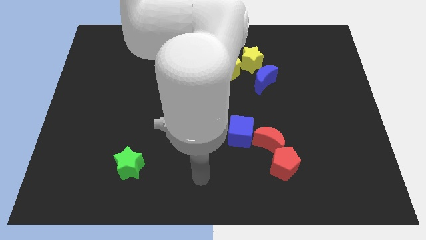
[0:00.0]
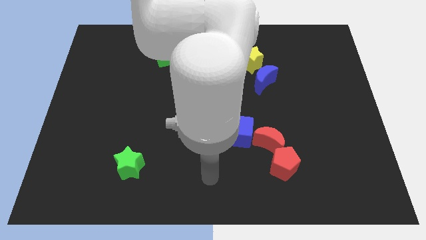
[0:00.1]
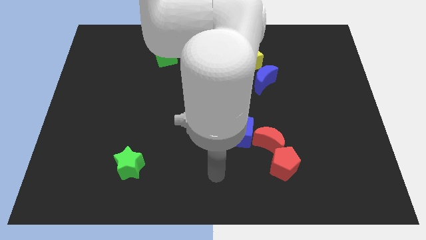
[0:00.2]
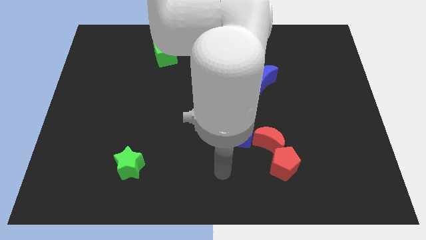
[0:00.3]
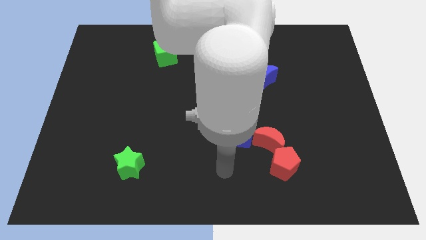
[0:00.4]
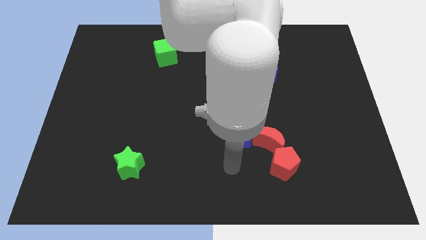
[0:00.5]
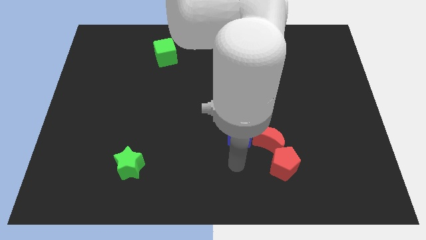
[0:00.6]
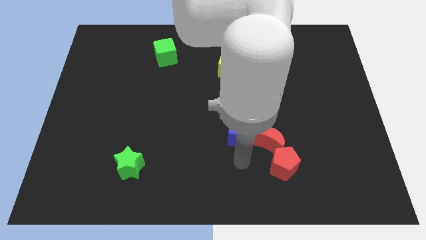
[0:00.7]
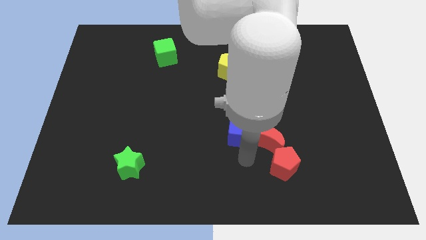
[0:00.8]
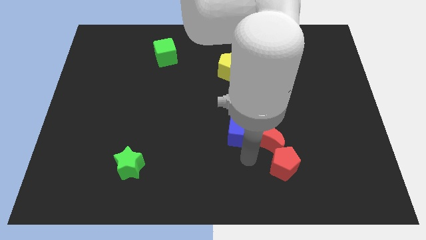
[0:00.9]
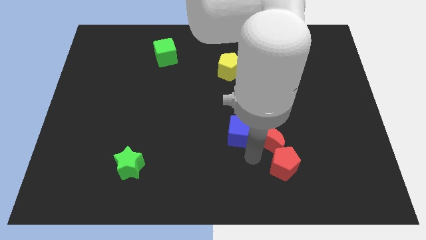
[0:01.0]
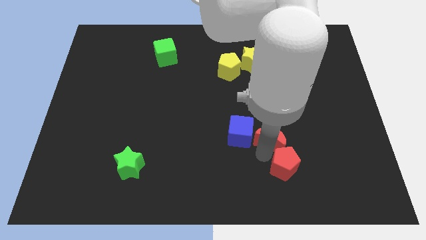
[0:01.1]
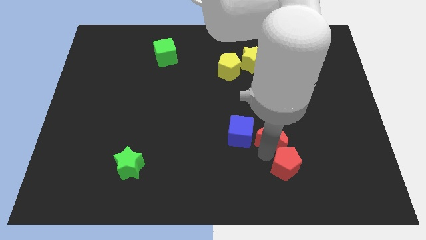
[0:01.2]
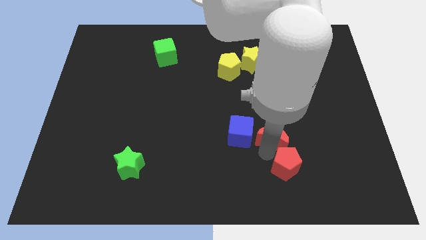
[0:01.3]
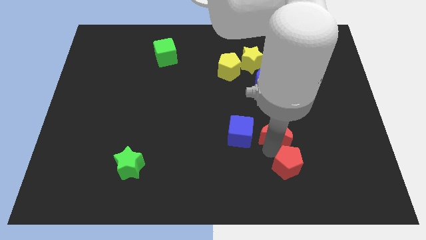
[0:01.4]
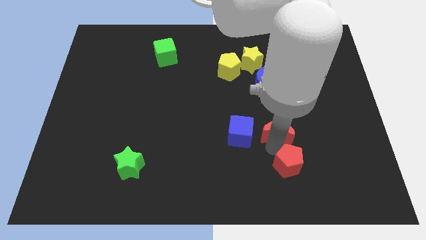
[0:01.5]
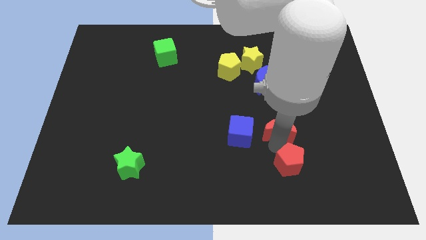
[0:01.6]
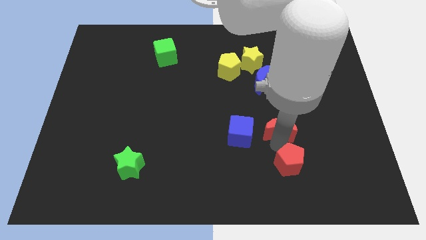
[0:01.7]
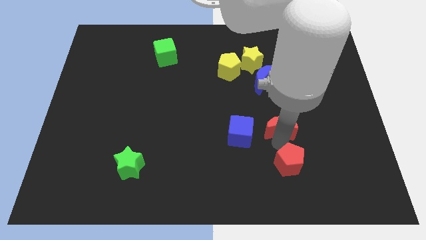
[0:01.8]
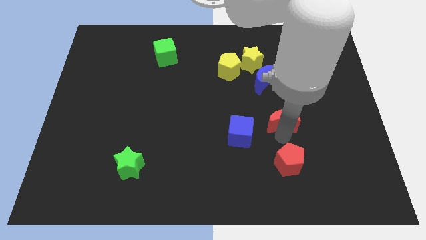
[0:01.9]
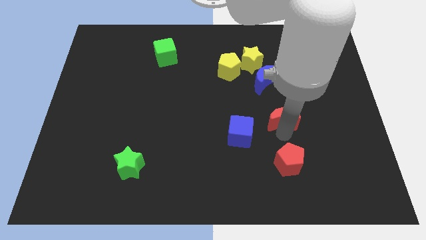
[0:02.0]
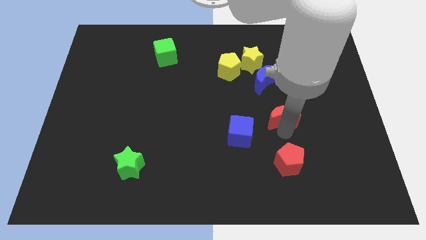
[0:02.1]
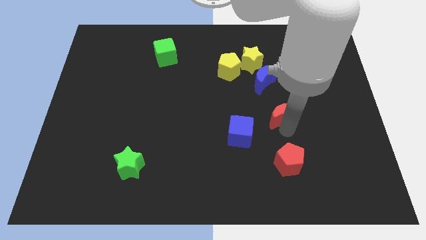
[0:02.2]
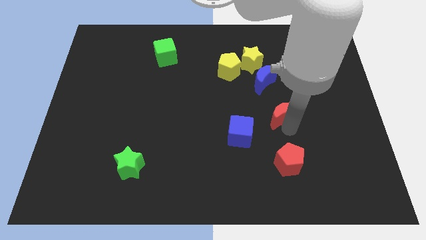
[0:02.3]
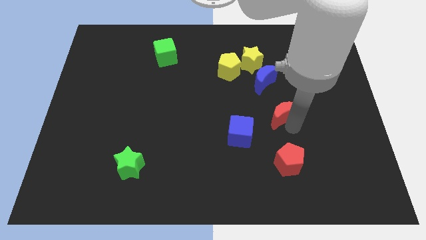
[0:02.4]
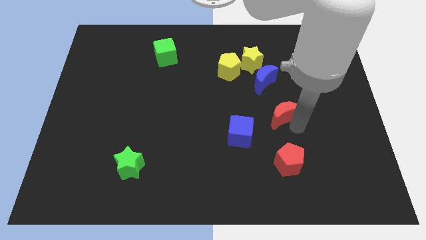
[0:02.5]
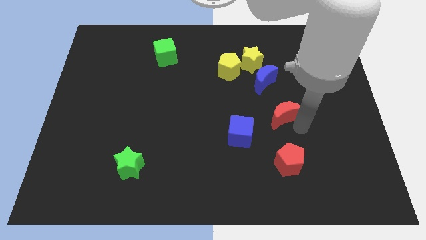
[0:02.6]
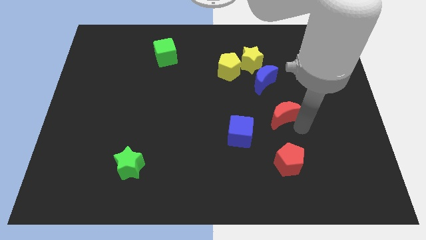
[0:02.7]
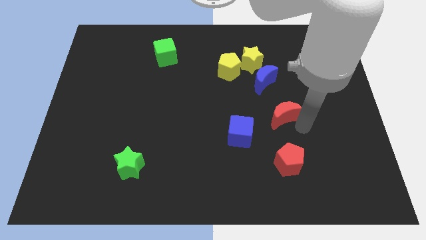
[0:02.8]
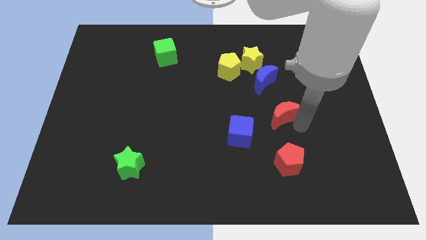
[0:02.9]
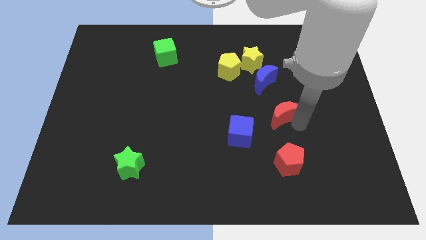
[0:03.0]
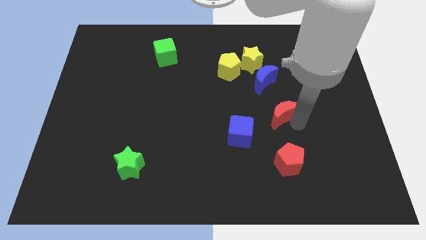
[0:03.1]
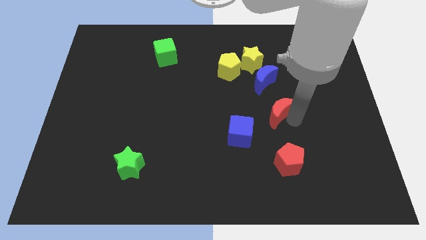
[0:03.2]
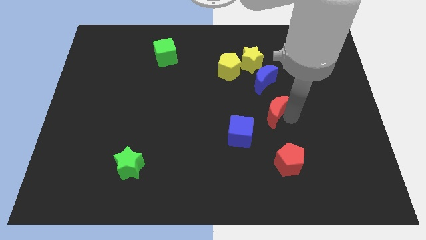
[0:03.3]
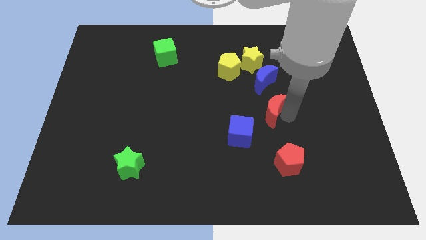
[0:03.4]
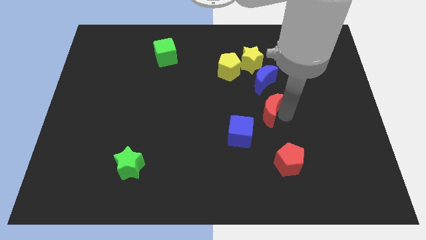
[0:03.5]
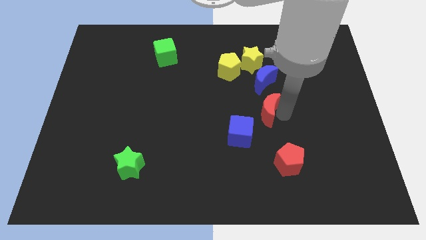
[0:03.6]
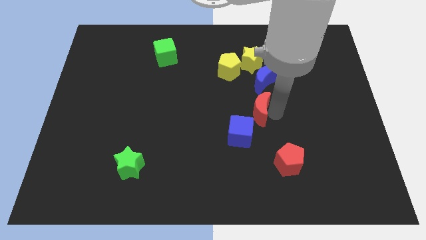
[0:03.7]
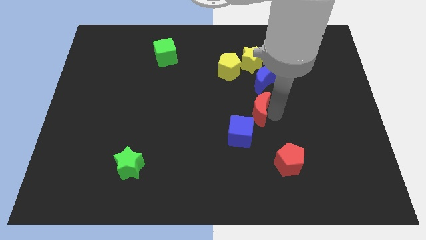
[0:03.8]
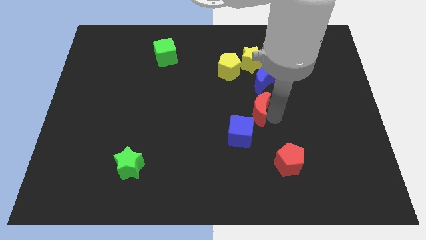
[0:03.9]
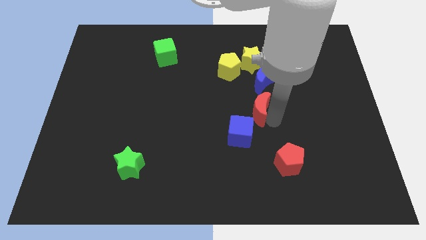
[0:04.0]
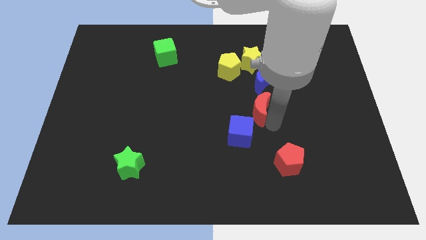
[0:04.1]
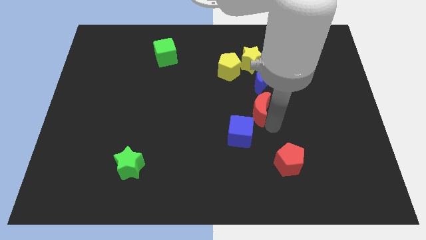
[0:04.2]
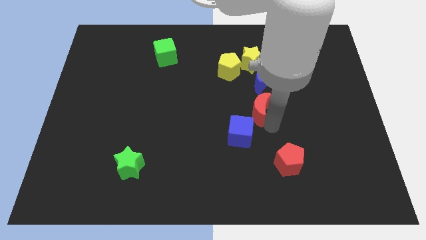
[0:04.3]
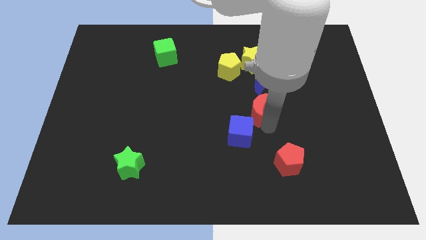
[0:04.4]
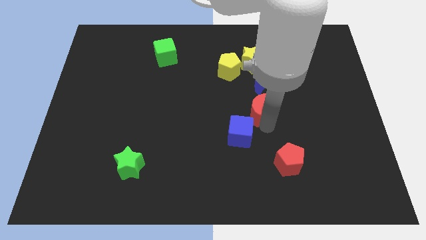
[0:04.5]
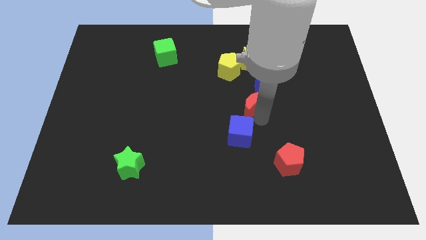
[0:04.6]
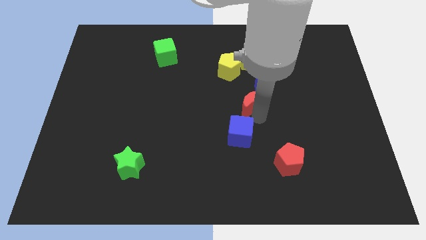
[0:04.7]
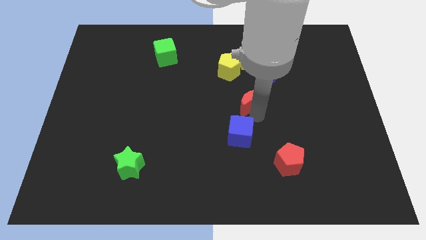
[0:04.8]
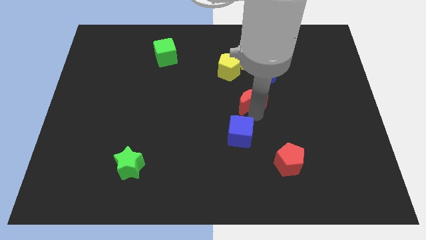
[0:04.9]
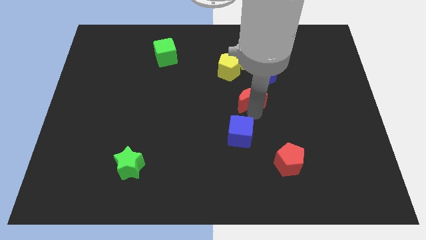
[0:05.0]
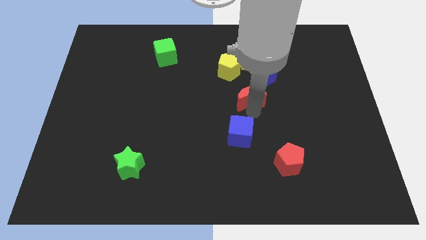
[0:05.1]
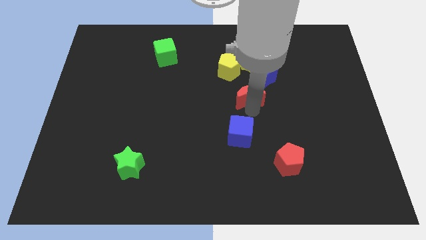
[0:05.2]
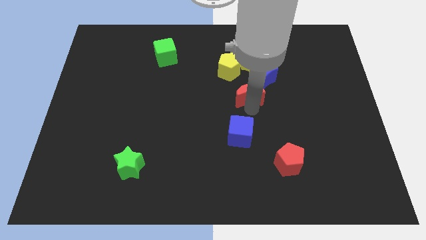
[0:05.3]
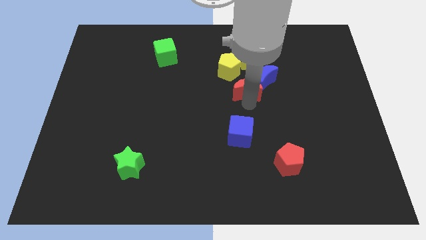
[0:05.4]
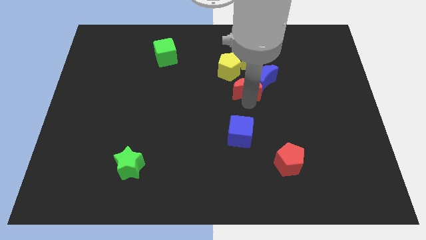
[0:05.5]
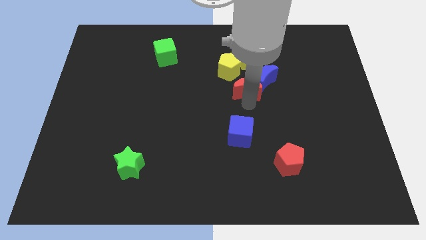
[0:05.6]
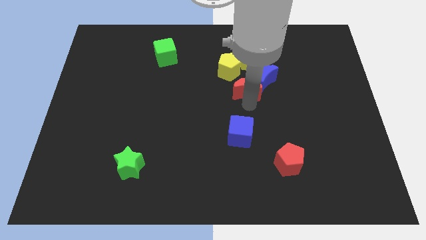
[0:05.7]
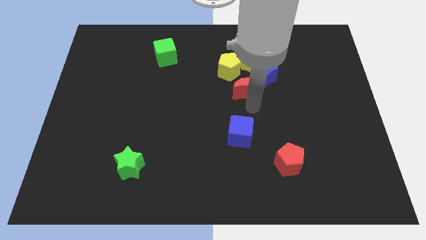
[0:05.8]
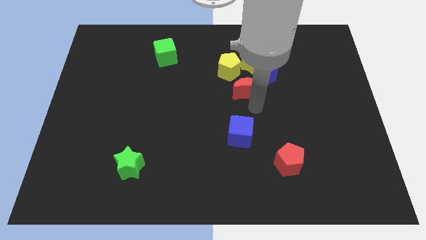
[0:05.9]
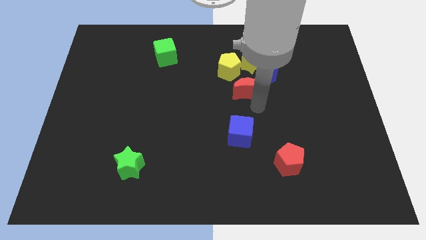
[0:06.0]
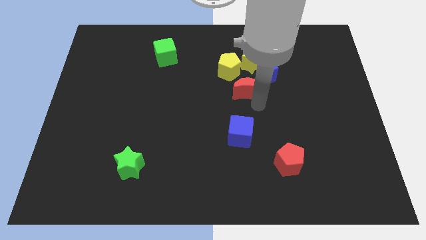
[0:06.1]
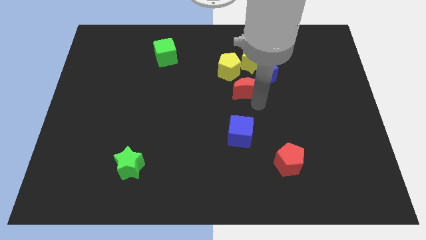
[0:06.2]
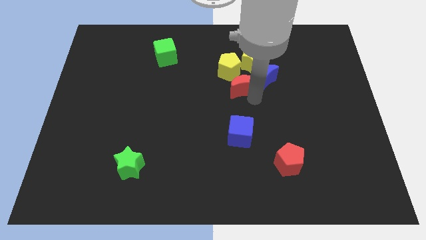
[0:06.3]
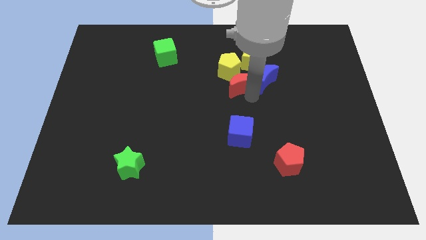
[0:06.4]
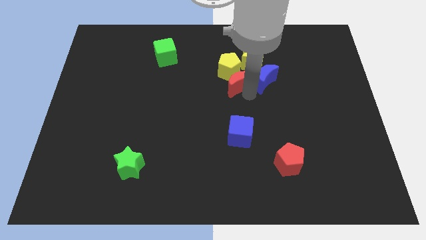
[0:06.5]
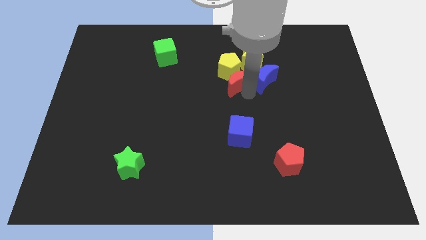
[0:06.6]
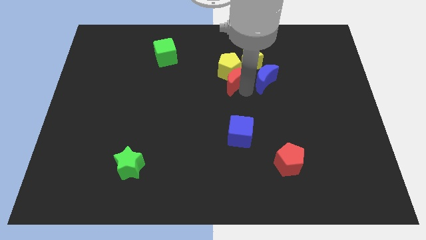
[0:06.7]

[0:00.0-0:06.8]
put the red moon close to the yellow pentagon

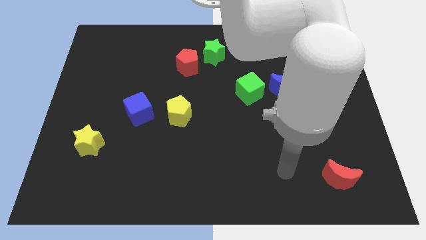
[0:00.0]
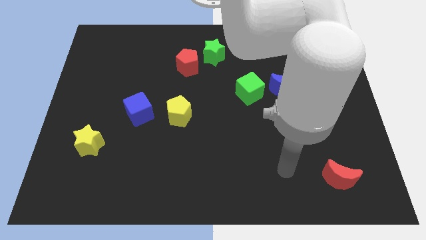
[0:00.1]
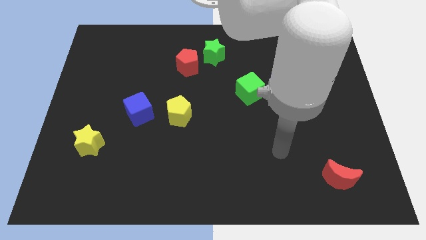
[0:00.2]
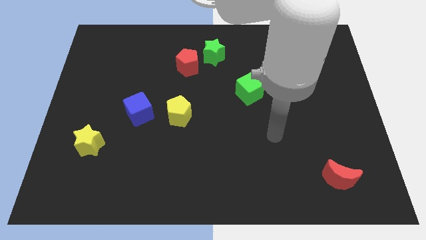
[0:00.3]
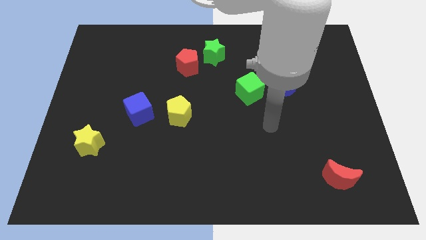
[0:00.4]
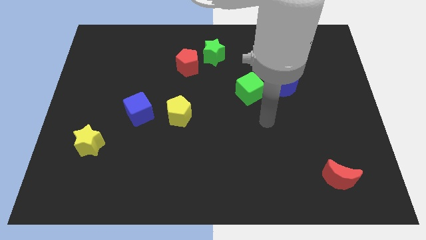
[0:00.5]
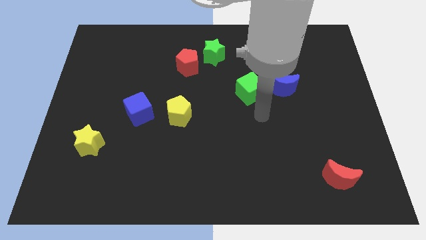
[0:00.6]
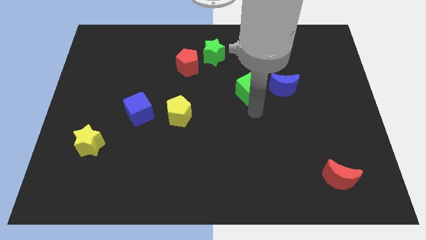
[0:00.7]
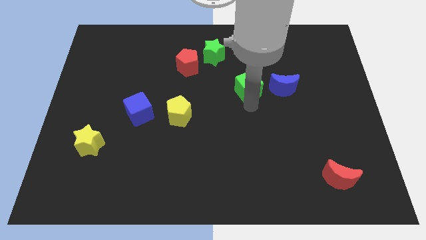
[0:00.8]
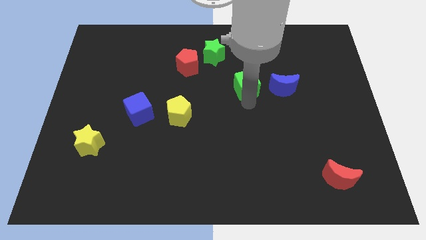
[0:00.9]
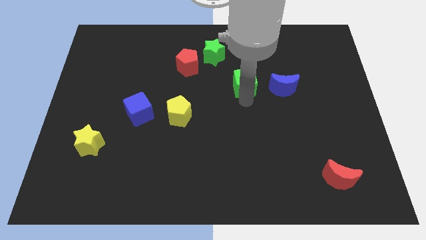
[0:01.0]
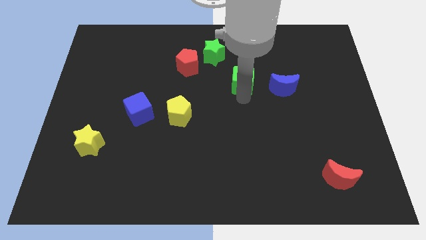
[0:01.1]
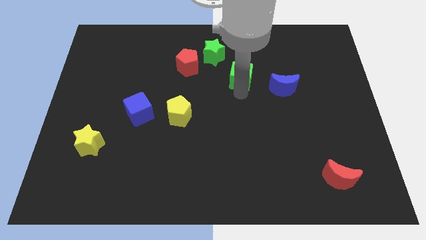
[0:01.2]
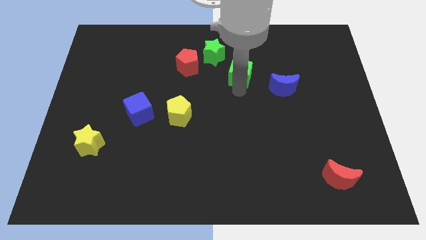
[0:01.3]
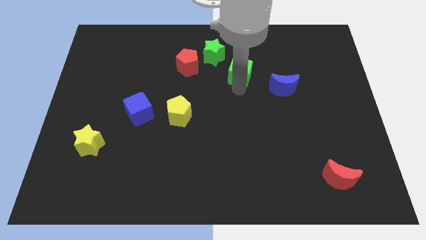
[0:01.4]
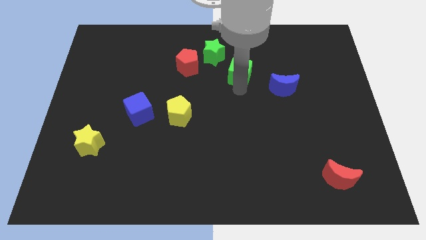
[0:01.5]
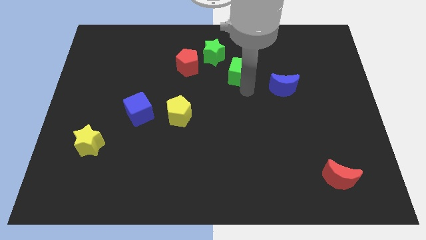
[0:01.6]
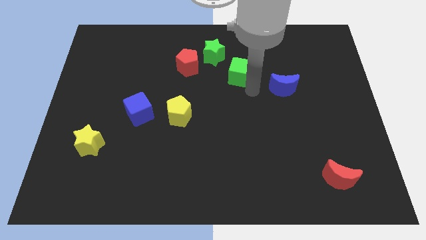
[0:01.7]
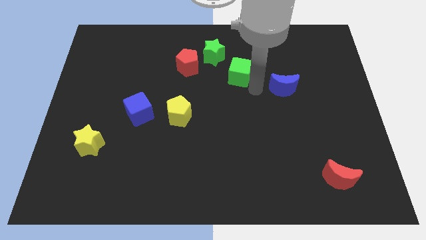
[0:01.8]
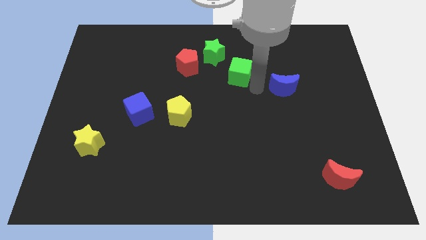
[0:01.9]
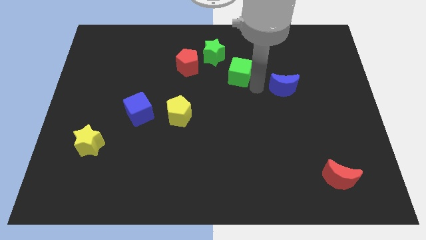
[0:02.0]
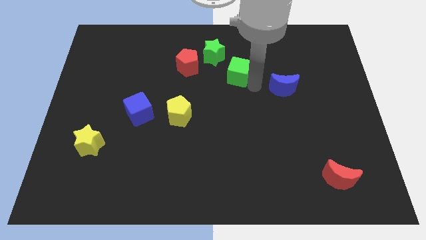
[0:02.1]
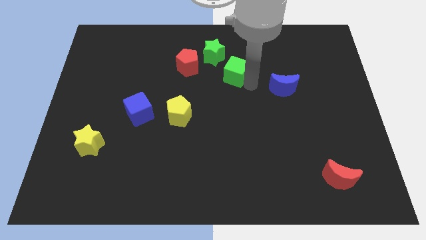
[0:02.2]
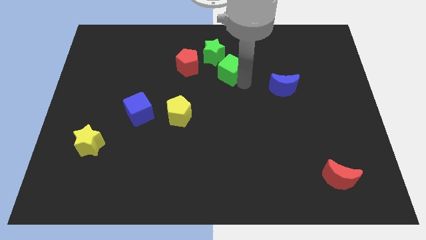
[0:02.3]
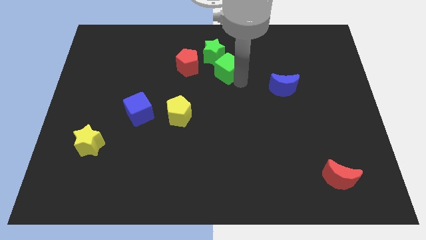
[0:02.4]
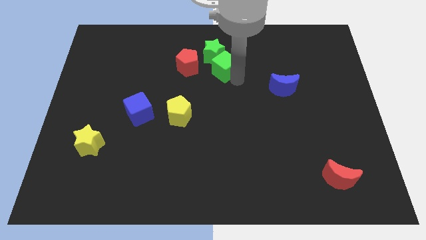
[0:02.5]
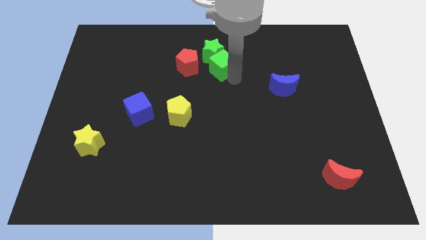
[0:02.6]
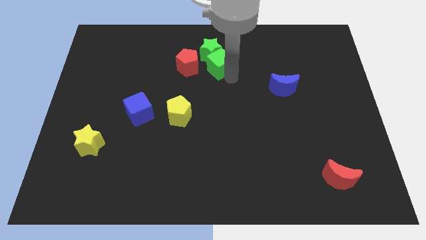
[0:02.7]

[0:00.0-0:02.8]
move the green cube next to the green star
